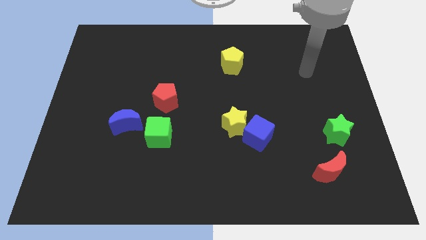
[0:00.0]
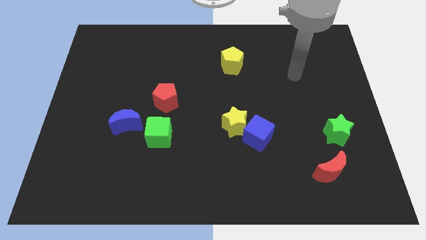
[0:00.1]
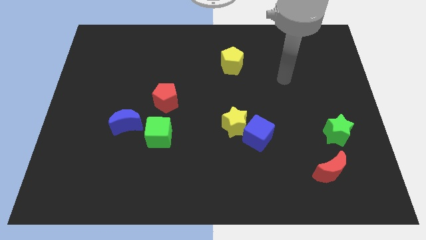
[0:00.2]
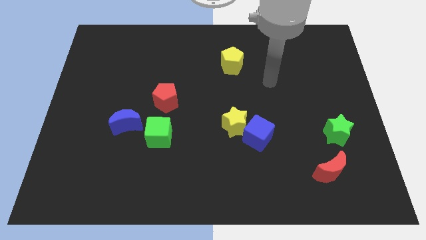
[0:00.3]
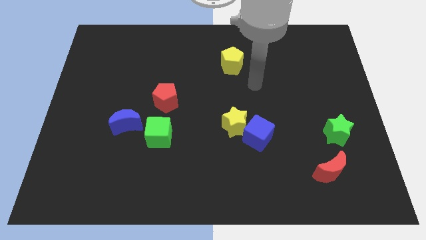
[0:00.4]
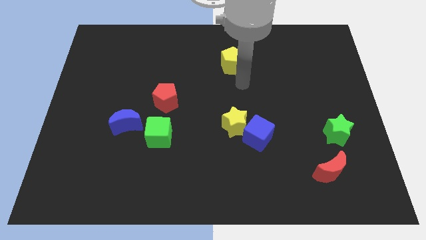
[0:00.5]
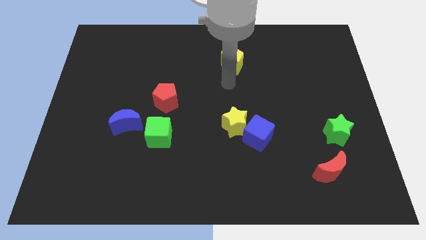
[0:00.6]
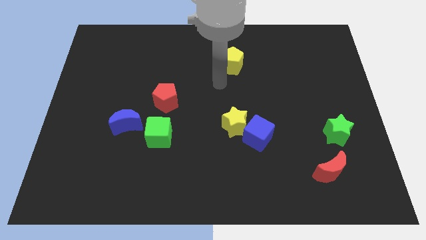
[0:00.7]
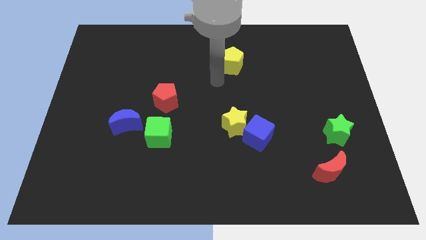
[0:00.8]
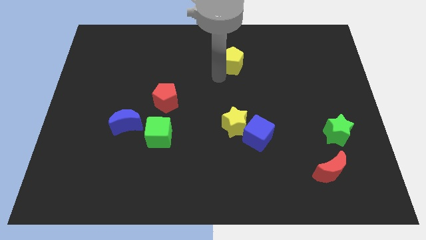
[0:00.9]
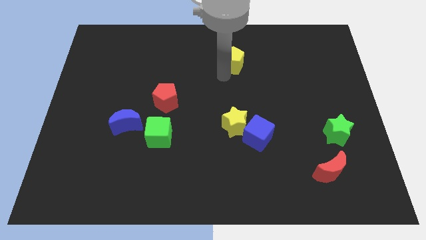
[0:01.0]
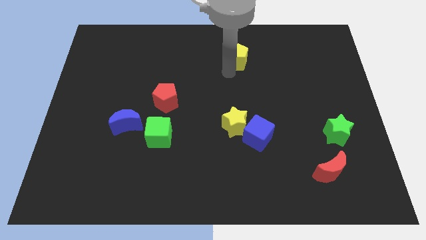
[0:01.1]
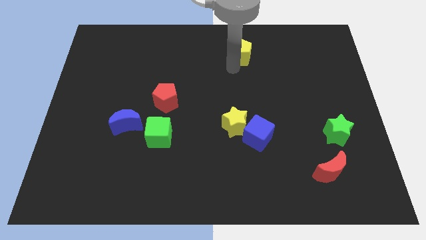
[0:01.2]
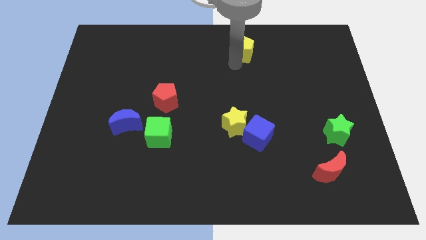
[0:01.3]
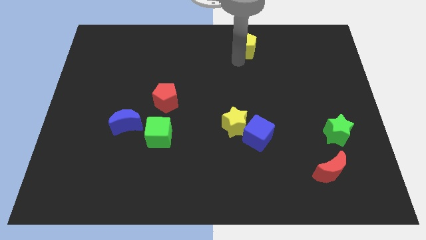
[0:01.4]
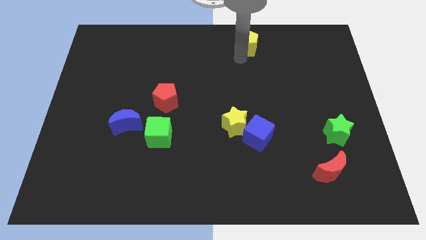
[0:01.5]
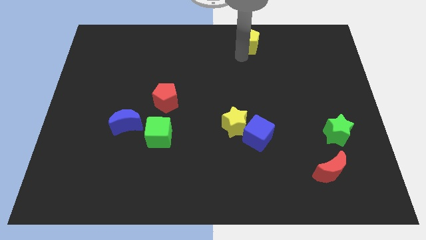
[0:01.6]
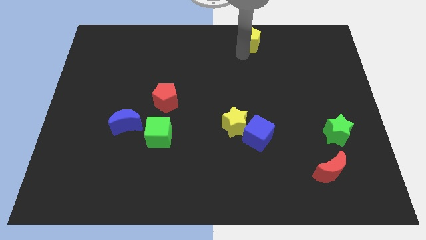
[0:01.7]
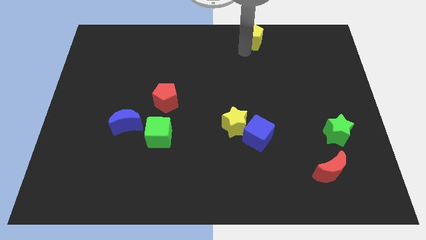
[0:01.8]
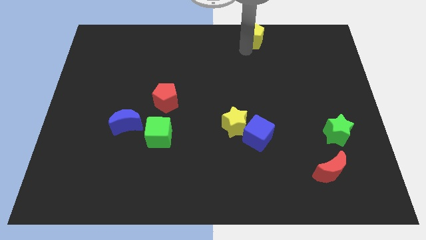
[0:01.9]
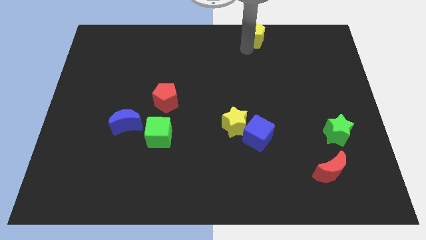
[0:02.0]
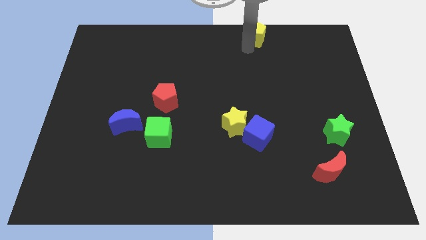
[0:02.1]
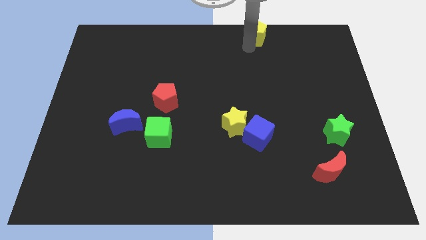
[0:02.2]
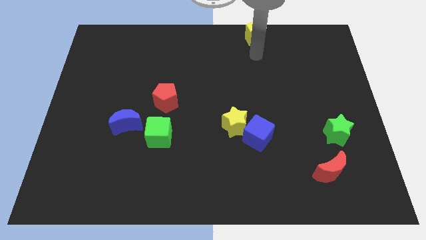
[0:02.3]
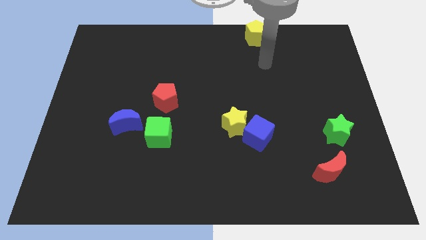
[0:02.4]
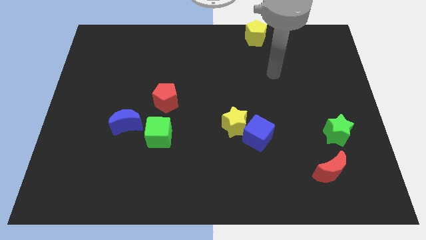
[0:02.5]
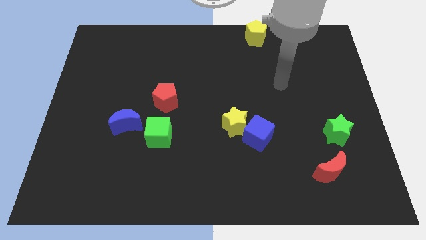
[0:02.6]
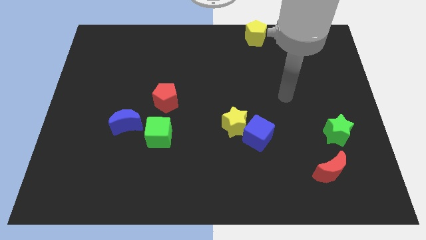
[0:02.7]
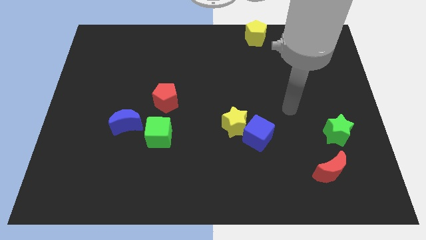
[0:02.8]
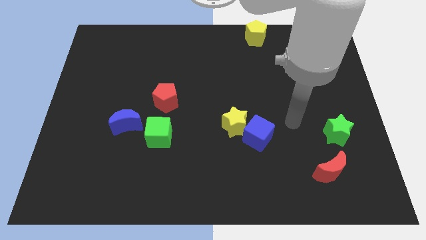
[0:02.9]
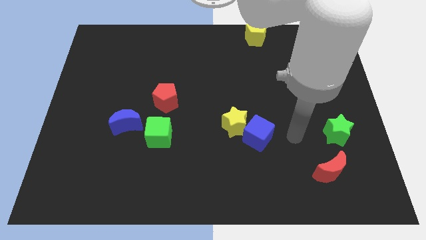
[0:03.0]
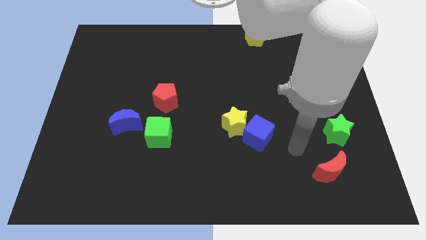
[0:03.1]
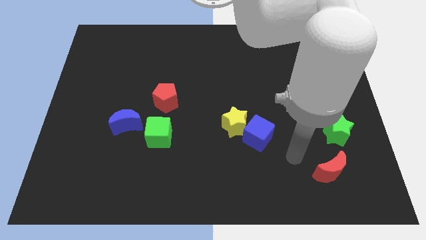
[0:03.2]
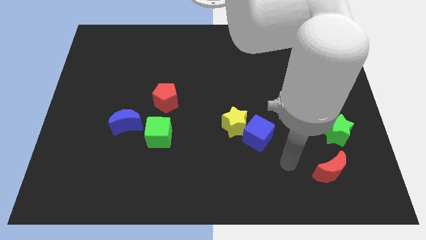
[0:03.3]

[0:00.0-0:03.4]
put the yellow pentagon at the top side of the blue cube

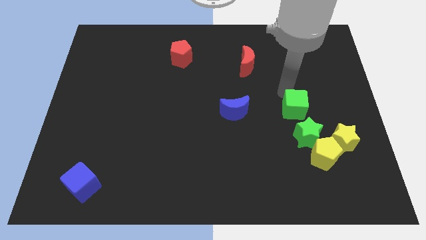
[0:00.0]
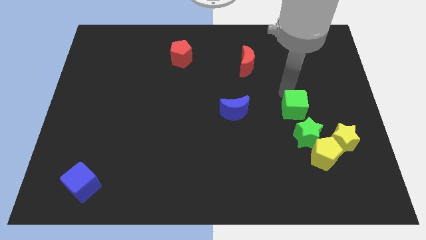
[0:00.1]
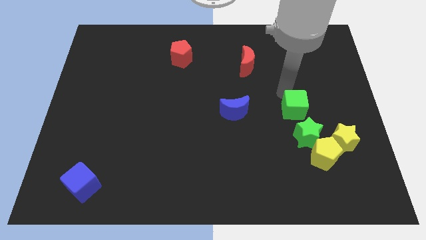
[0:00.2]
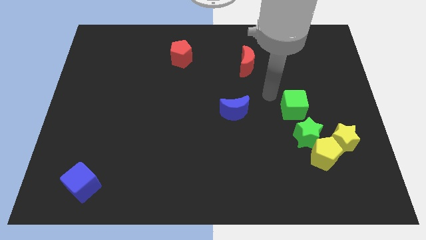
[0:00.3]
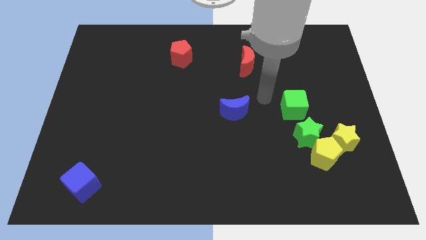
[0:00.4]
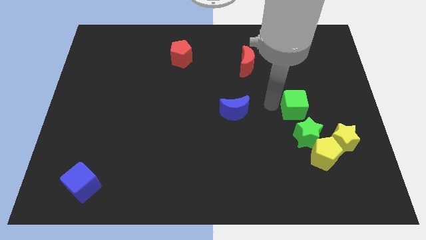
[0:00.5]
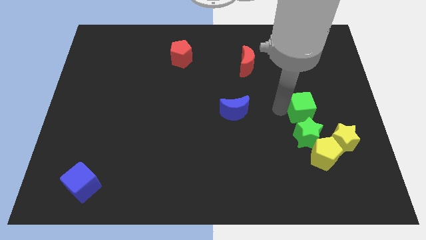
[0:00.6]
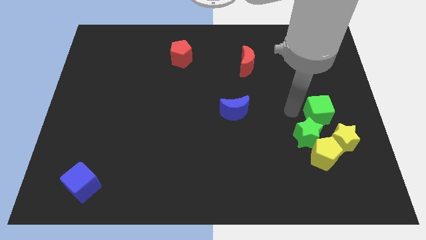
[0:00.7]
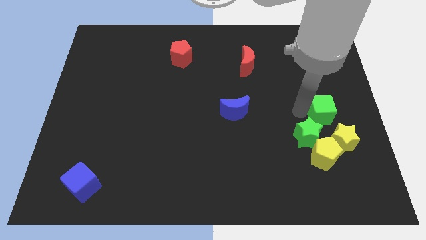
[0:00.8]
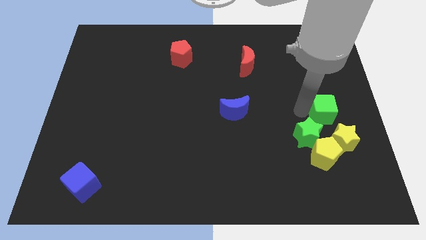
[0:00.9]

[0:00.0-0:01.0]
put the green cube at the top right of the green star

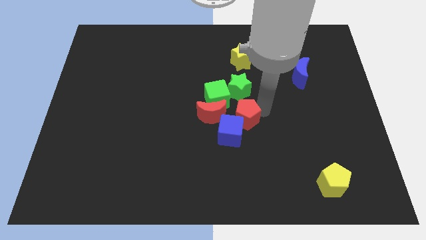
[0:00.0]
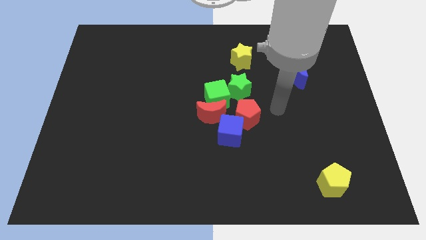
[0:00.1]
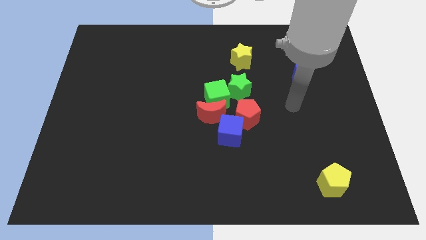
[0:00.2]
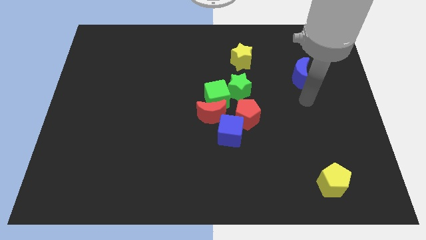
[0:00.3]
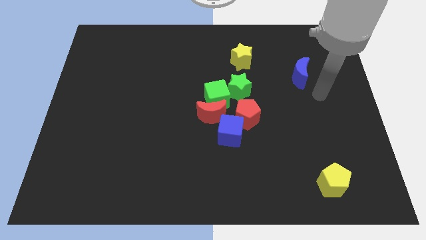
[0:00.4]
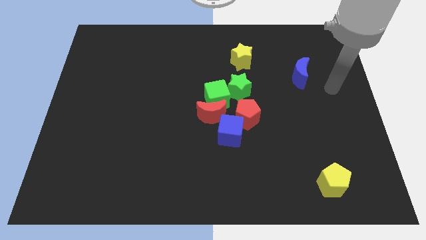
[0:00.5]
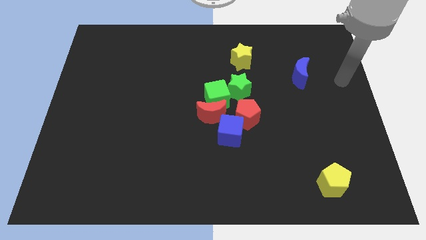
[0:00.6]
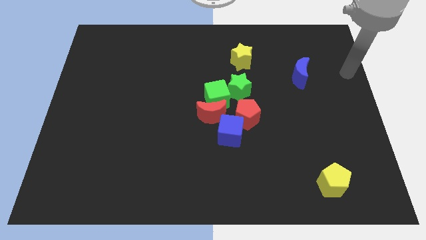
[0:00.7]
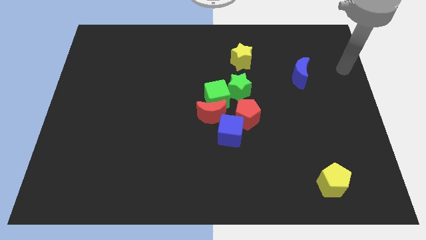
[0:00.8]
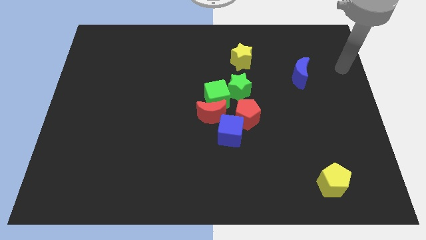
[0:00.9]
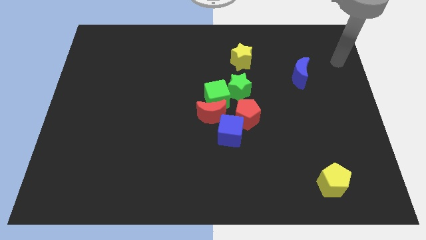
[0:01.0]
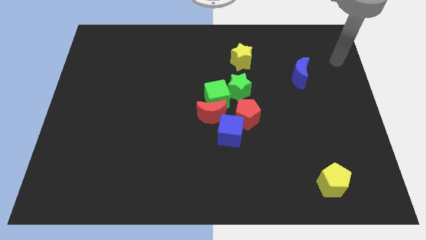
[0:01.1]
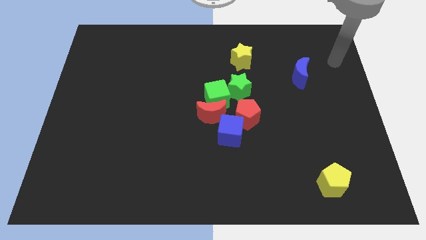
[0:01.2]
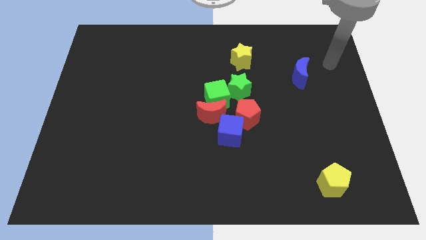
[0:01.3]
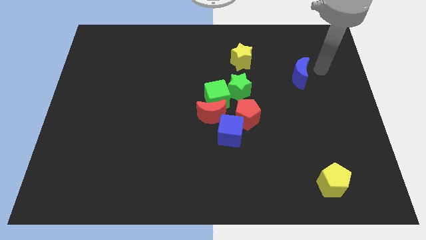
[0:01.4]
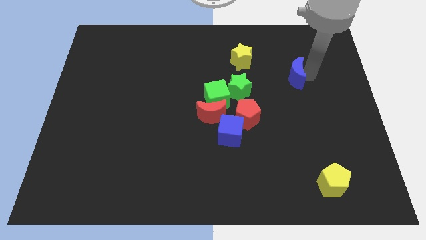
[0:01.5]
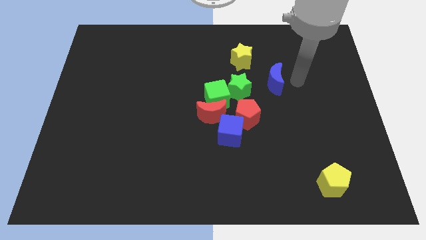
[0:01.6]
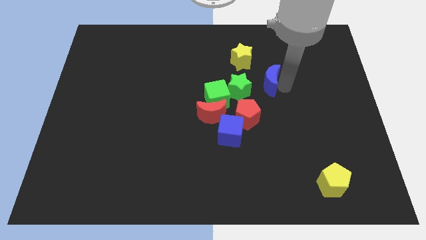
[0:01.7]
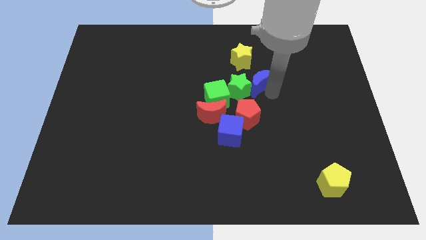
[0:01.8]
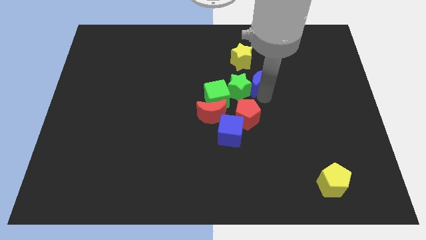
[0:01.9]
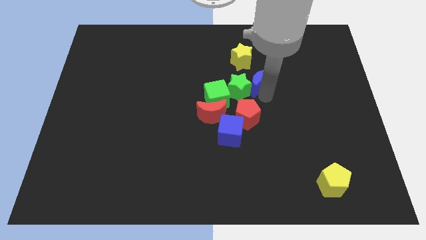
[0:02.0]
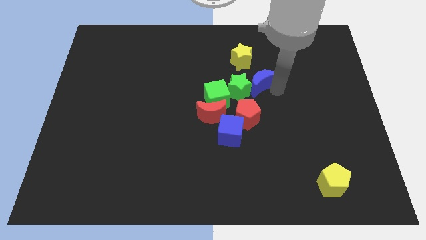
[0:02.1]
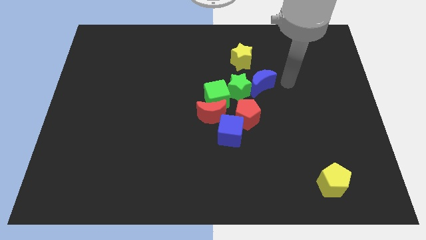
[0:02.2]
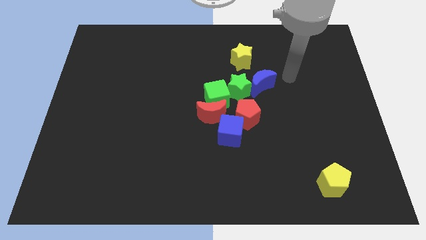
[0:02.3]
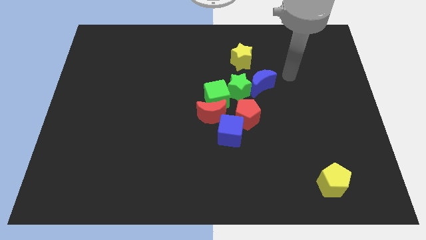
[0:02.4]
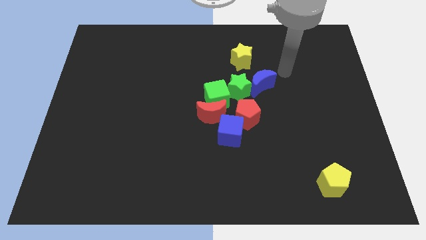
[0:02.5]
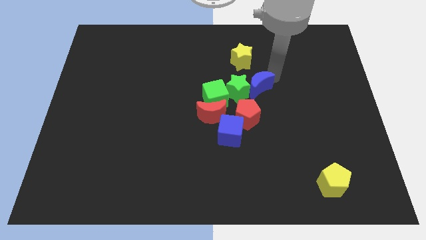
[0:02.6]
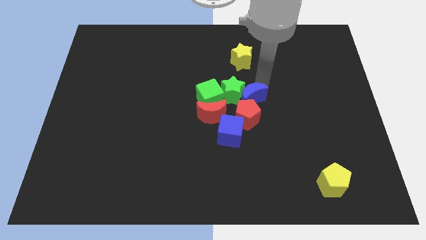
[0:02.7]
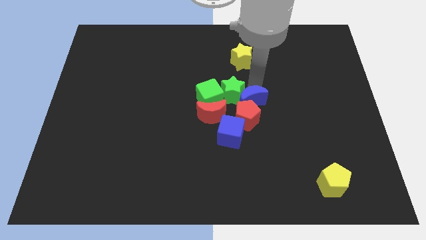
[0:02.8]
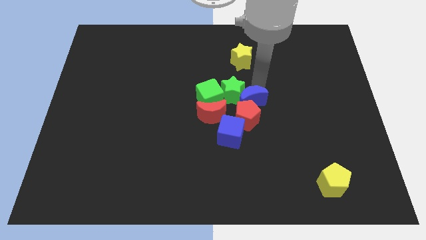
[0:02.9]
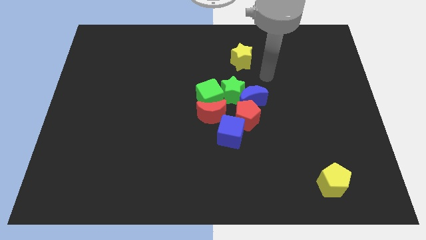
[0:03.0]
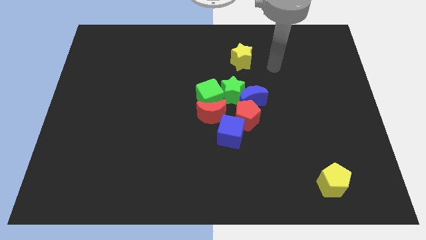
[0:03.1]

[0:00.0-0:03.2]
move the blue crescent close to the red pentagon

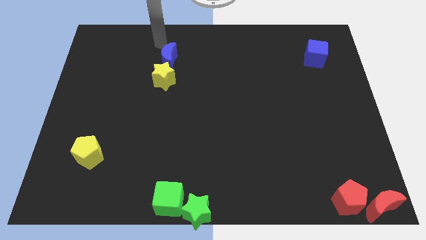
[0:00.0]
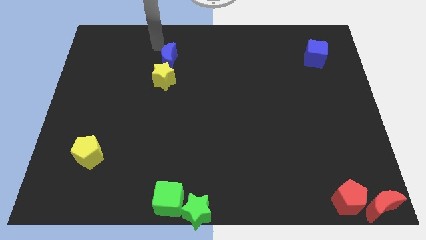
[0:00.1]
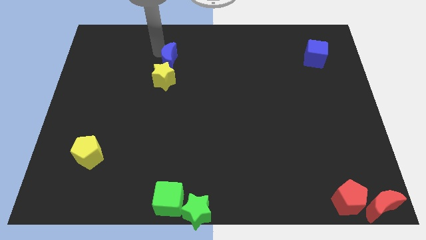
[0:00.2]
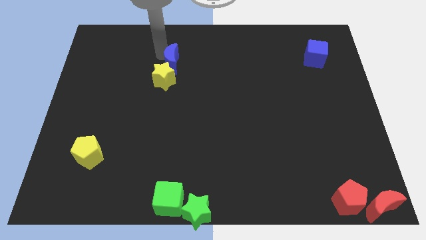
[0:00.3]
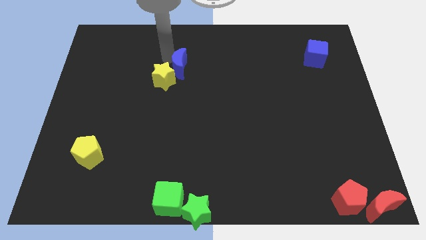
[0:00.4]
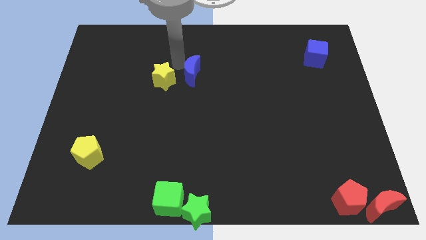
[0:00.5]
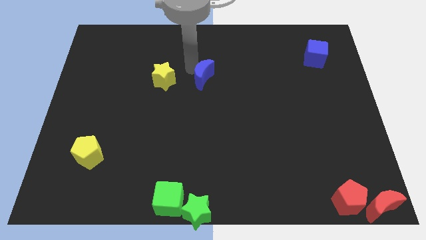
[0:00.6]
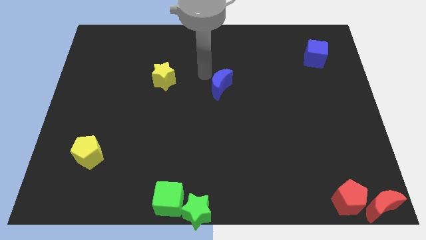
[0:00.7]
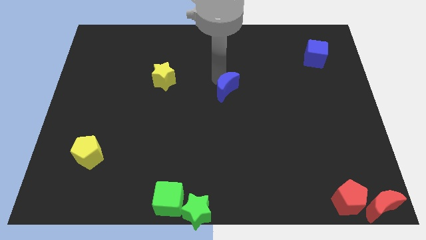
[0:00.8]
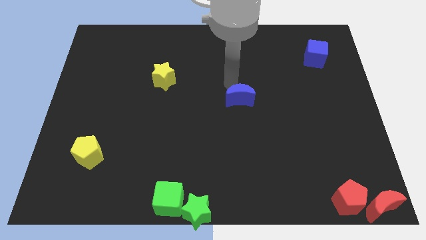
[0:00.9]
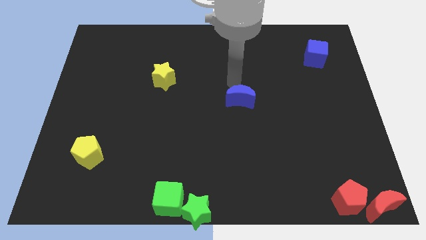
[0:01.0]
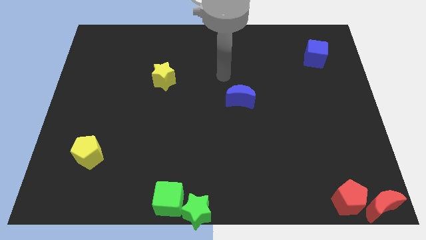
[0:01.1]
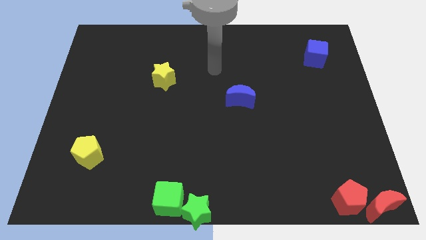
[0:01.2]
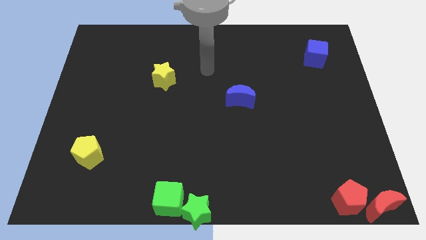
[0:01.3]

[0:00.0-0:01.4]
move the blue moon away from the yellow star
